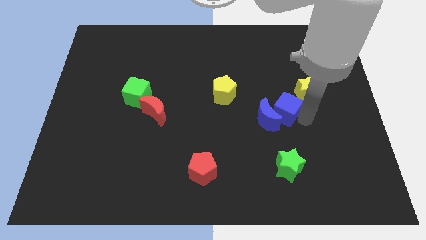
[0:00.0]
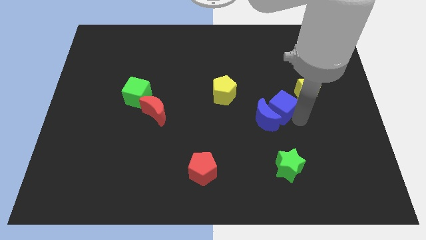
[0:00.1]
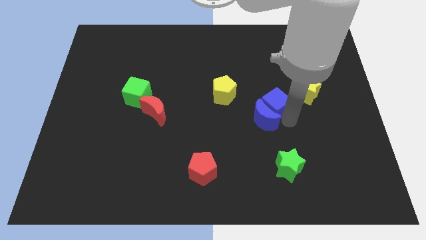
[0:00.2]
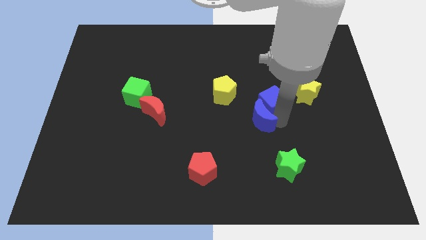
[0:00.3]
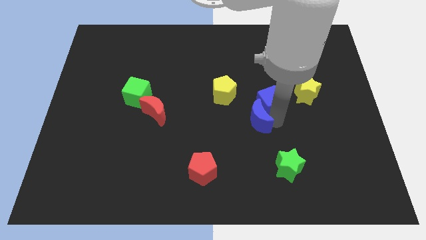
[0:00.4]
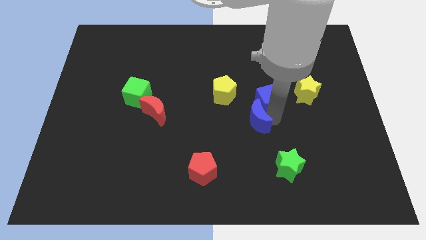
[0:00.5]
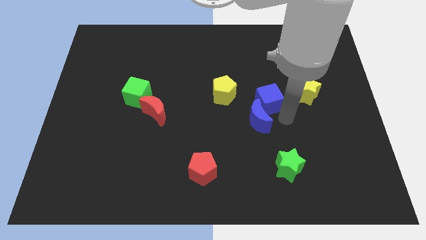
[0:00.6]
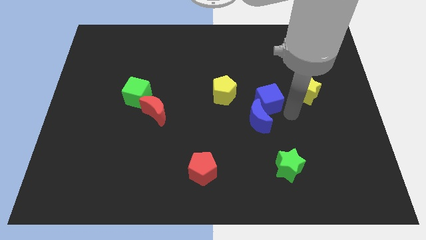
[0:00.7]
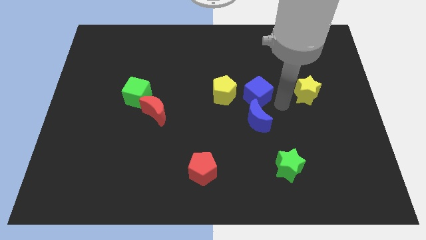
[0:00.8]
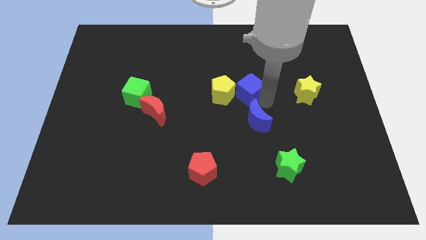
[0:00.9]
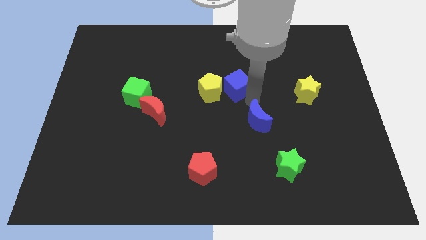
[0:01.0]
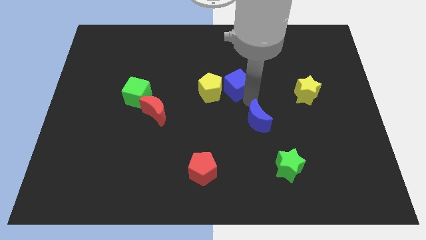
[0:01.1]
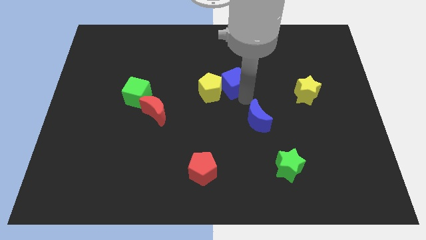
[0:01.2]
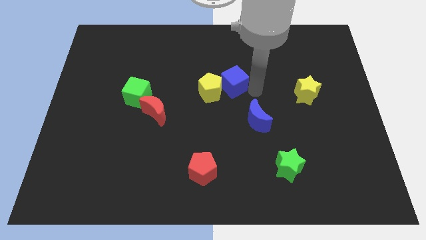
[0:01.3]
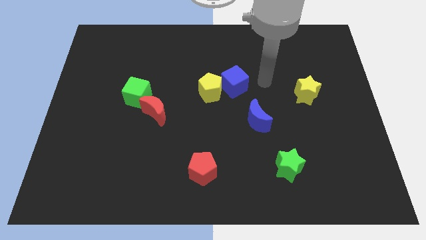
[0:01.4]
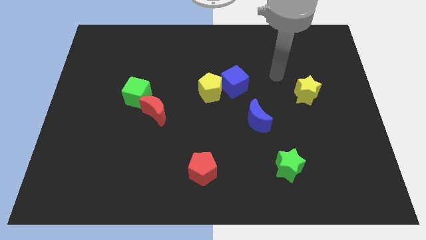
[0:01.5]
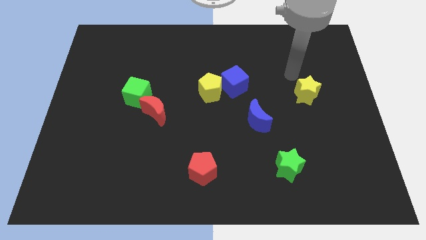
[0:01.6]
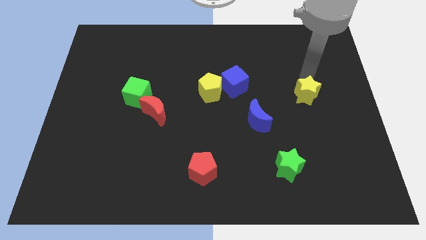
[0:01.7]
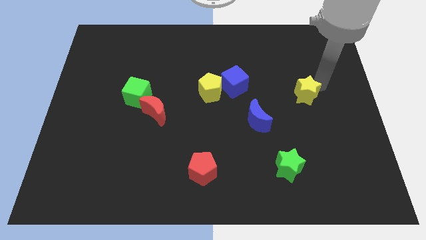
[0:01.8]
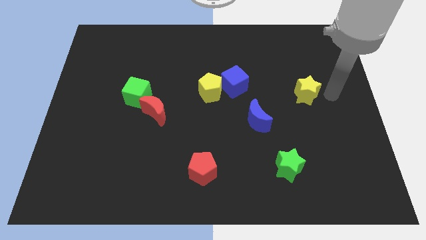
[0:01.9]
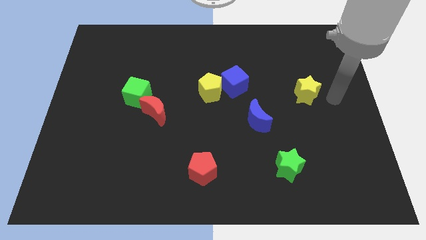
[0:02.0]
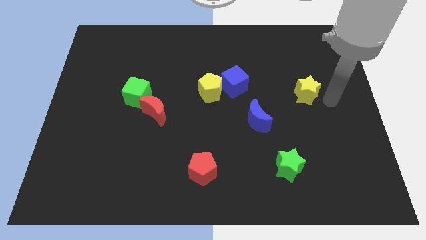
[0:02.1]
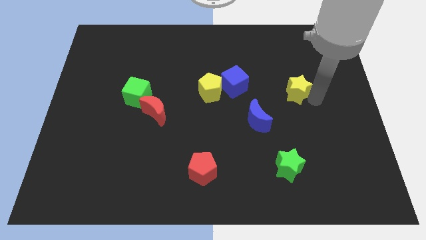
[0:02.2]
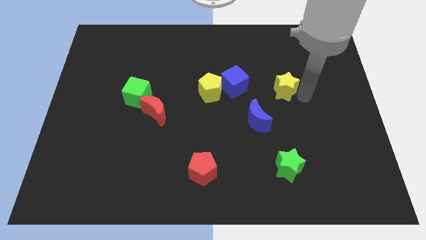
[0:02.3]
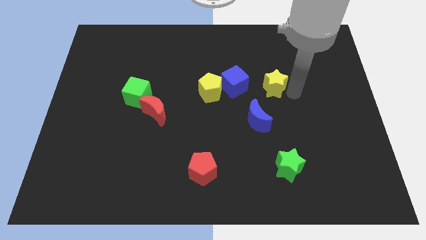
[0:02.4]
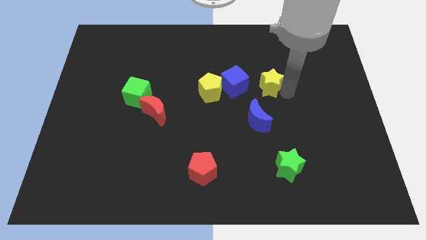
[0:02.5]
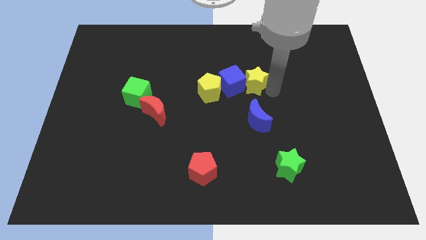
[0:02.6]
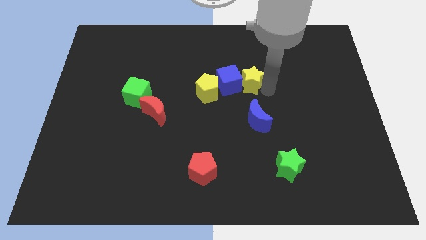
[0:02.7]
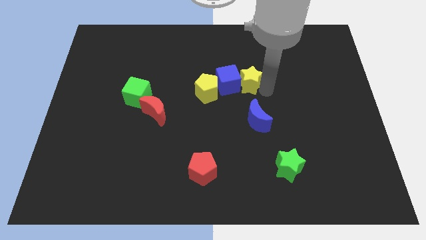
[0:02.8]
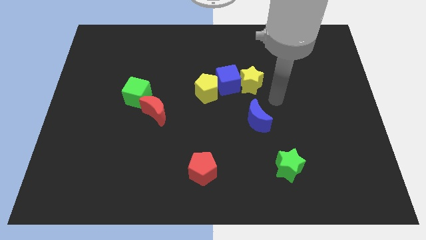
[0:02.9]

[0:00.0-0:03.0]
move yellow star towards blue cube

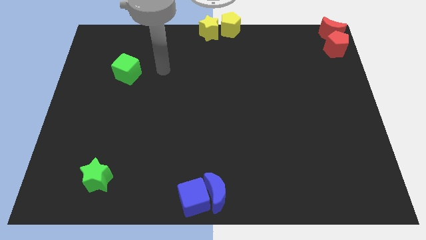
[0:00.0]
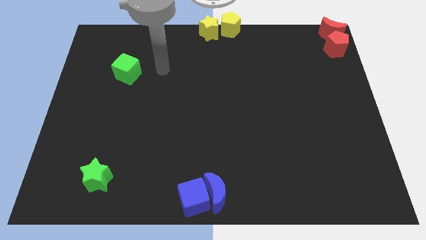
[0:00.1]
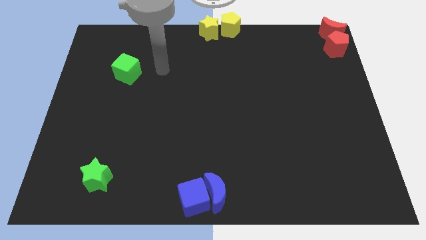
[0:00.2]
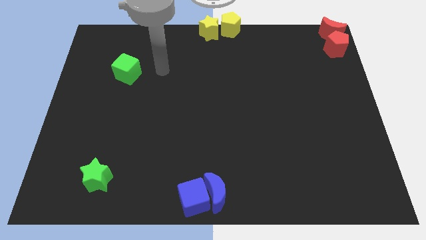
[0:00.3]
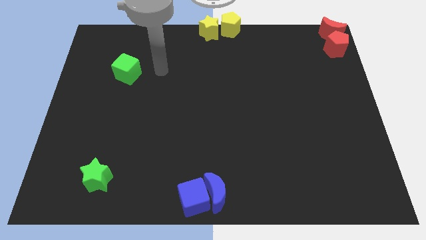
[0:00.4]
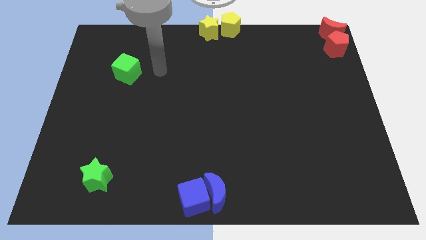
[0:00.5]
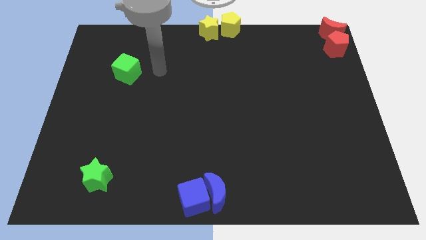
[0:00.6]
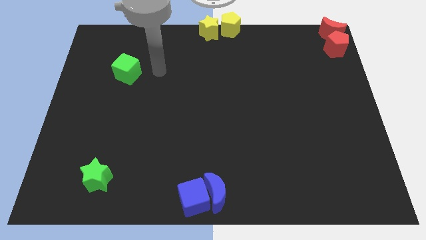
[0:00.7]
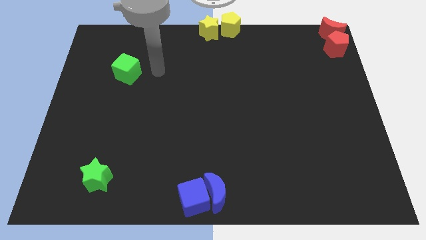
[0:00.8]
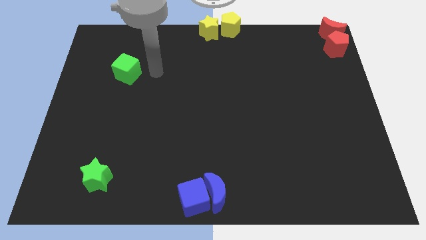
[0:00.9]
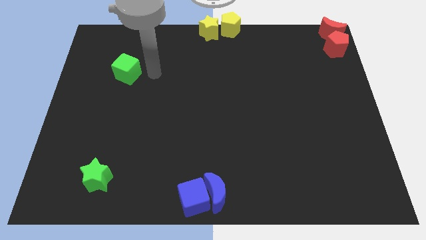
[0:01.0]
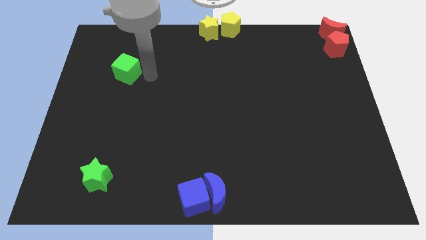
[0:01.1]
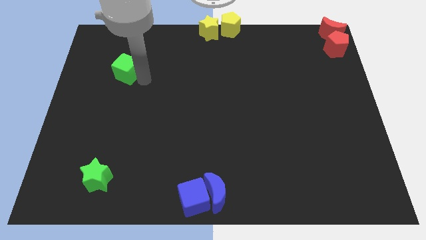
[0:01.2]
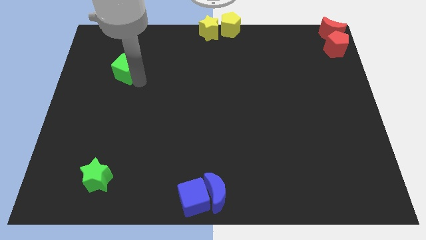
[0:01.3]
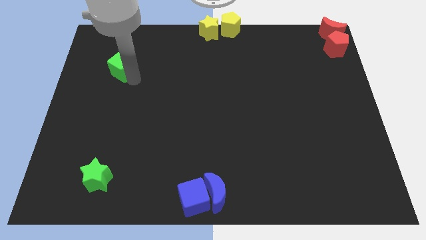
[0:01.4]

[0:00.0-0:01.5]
point your arm right to green cube

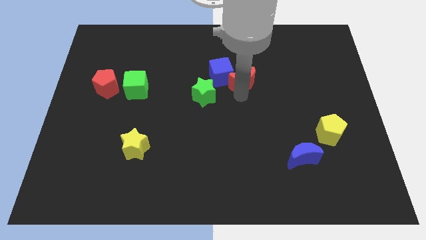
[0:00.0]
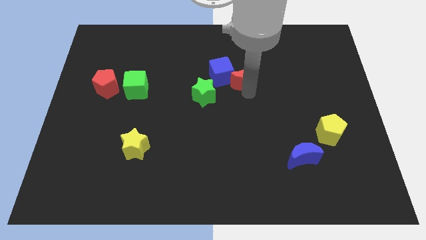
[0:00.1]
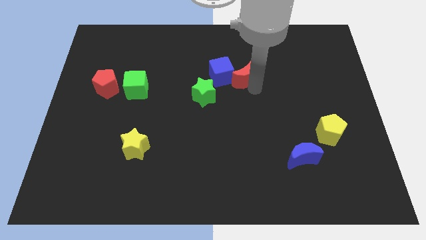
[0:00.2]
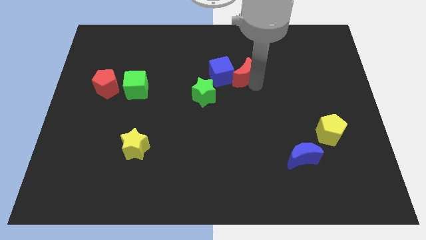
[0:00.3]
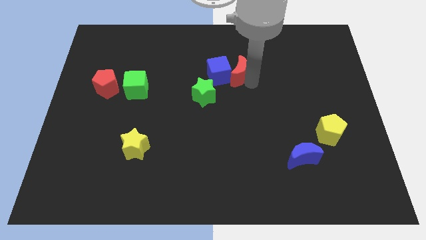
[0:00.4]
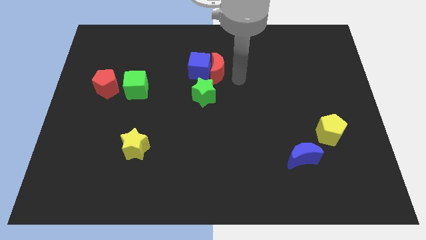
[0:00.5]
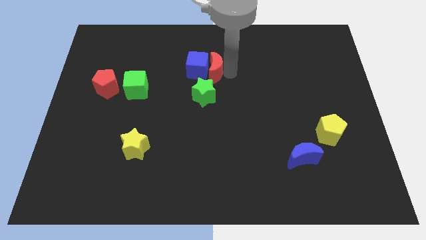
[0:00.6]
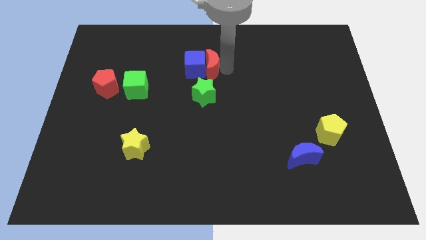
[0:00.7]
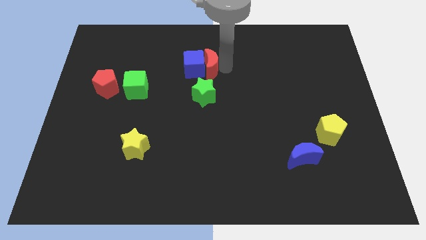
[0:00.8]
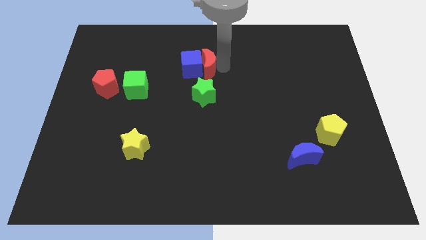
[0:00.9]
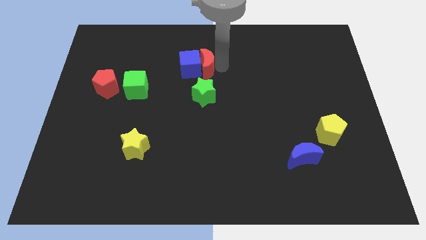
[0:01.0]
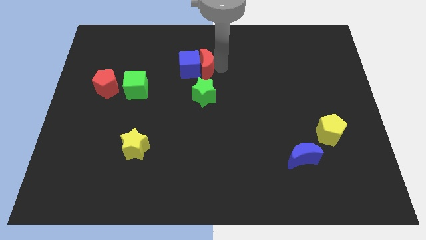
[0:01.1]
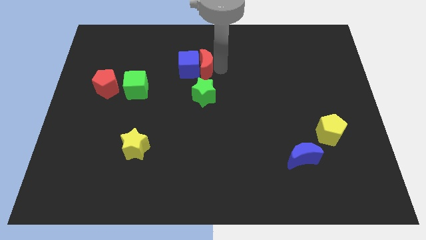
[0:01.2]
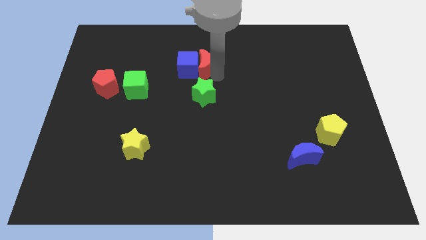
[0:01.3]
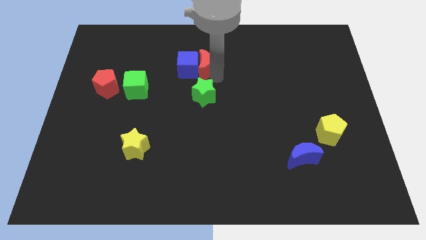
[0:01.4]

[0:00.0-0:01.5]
push the red moon into the blue cube

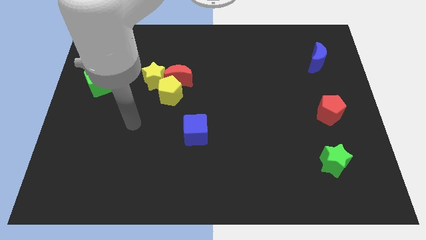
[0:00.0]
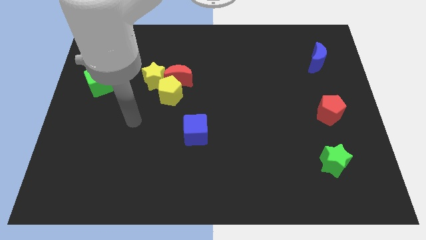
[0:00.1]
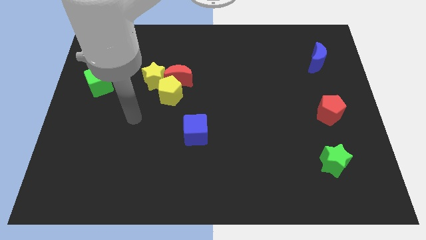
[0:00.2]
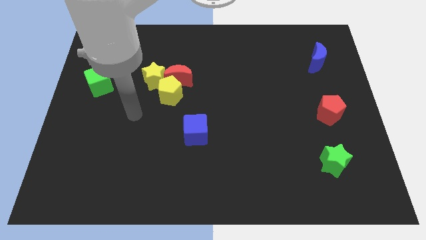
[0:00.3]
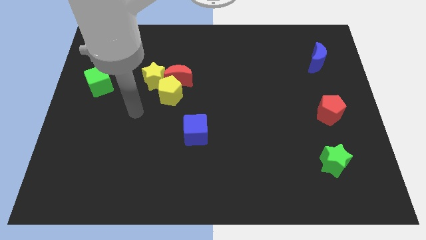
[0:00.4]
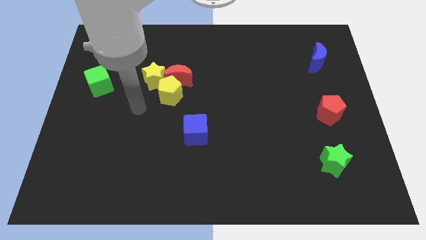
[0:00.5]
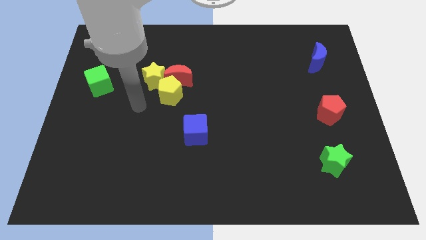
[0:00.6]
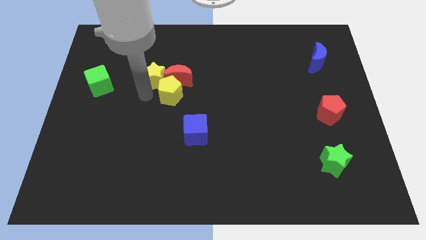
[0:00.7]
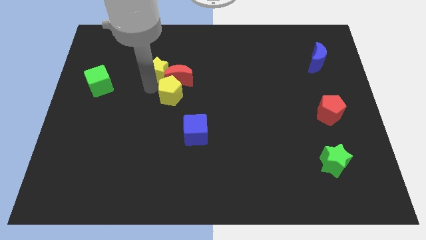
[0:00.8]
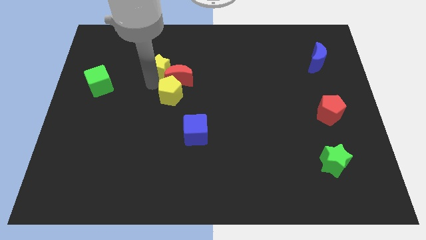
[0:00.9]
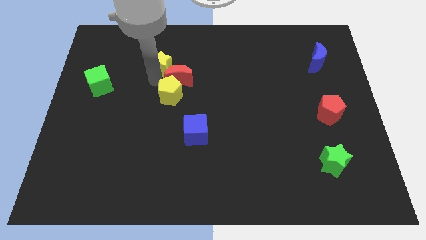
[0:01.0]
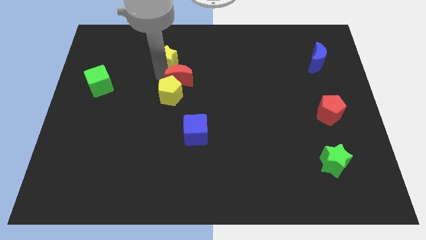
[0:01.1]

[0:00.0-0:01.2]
separate the yellow star from the red moon

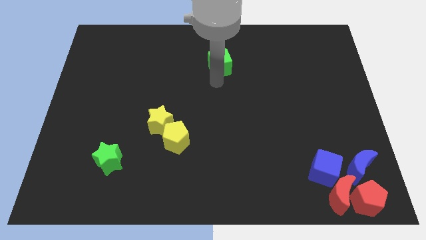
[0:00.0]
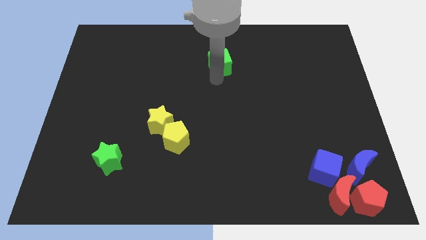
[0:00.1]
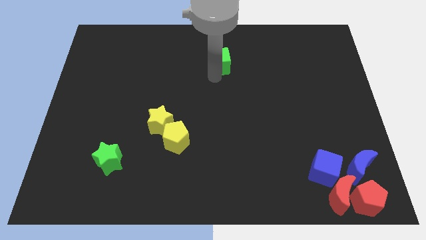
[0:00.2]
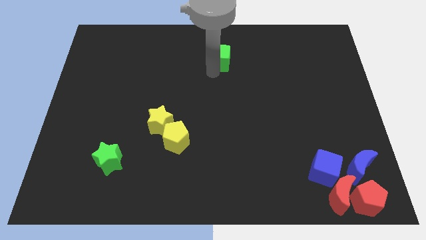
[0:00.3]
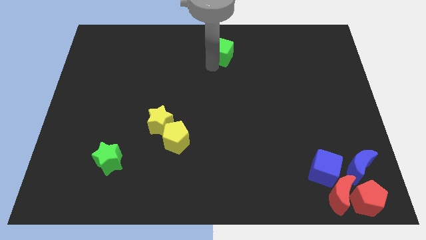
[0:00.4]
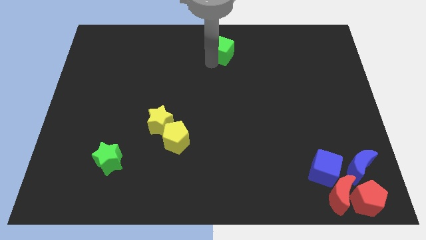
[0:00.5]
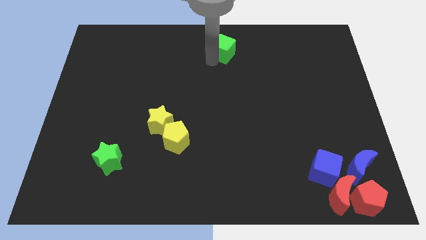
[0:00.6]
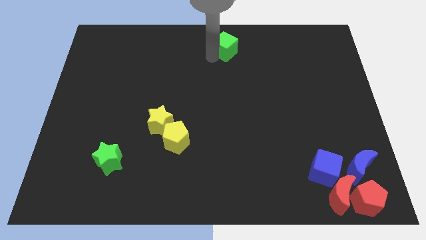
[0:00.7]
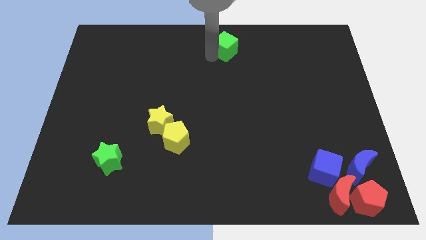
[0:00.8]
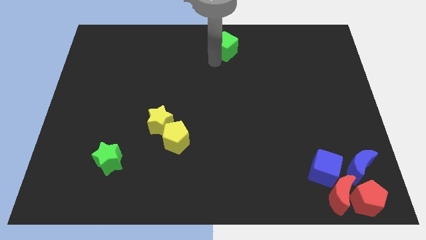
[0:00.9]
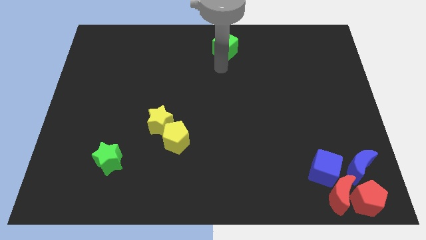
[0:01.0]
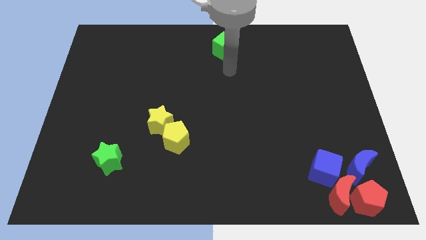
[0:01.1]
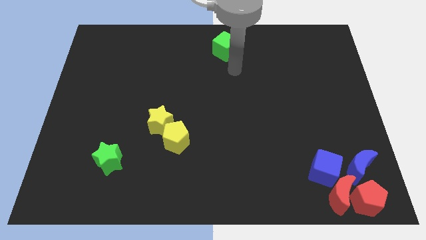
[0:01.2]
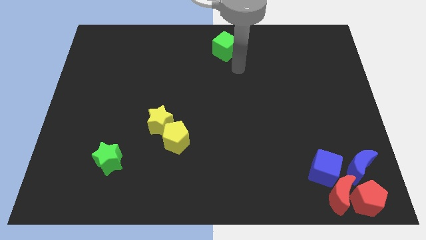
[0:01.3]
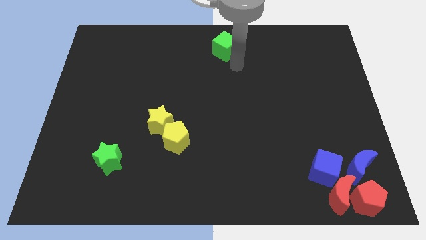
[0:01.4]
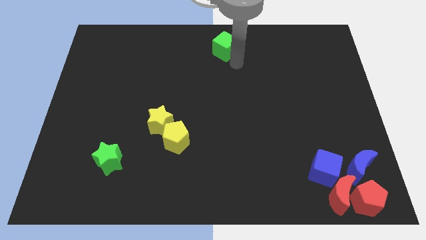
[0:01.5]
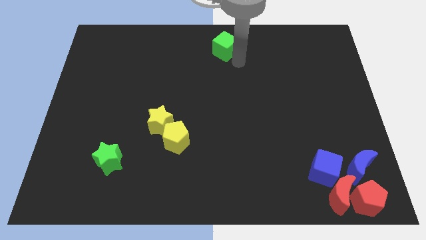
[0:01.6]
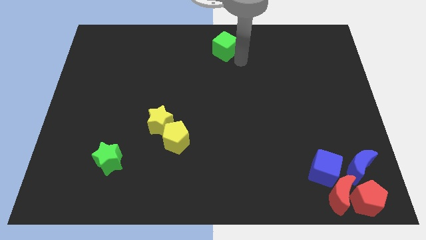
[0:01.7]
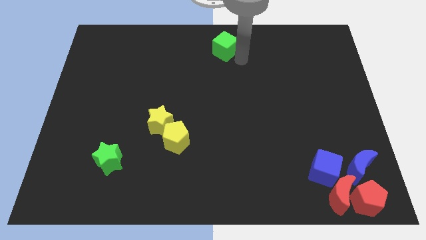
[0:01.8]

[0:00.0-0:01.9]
push the green cube towards the top center of the board
